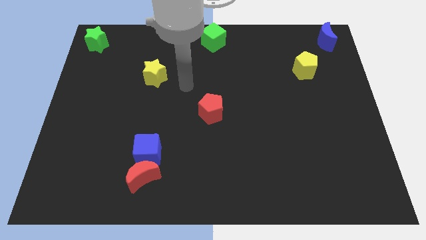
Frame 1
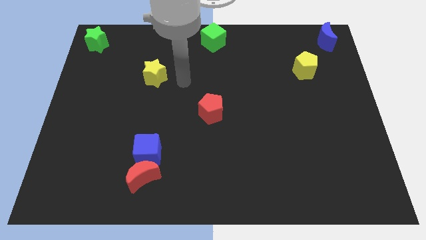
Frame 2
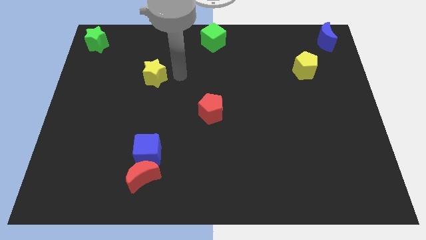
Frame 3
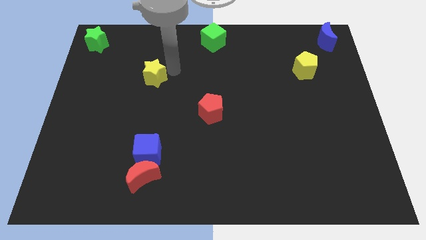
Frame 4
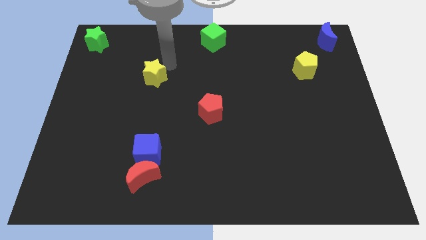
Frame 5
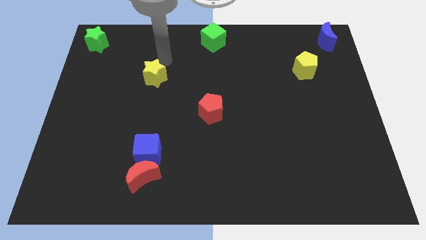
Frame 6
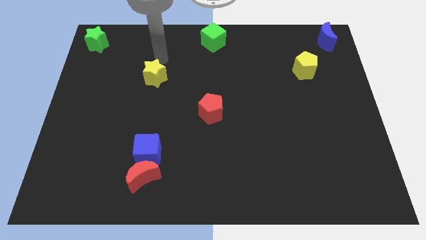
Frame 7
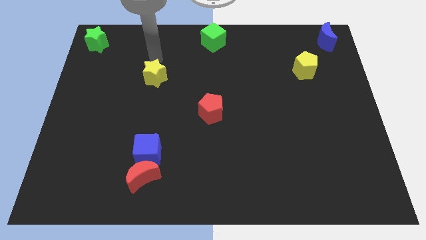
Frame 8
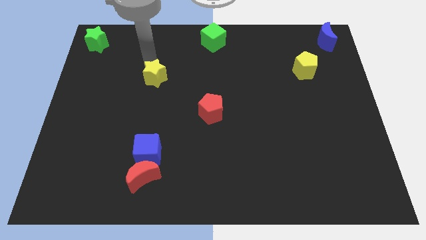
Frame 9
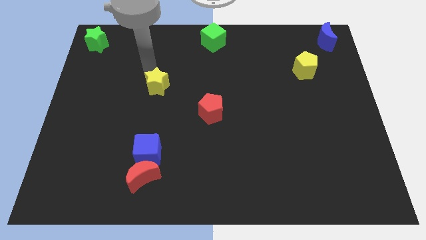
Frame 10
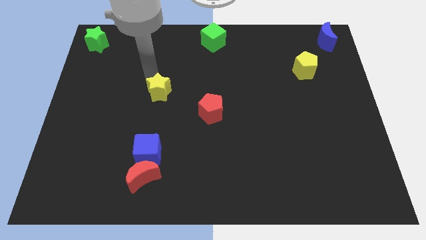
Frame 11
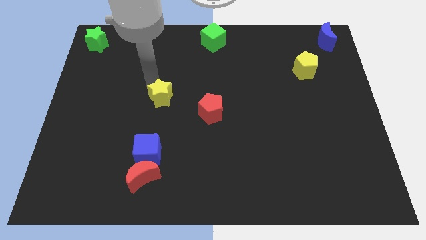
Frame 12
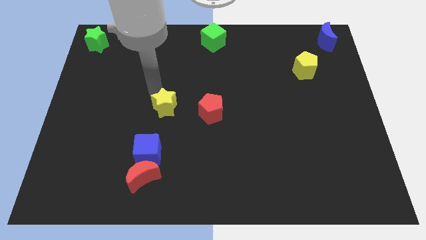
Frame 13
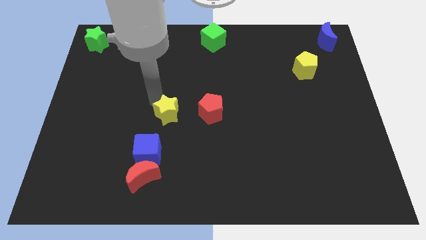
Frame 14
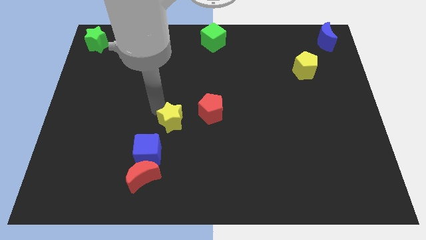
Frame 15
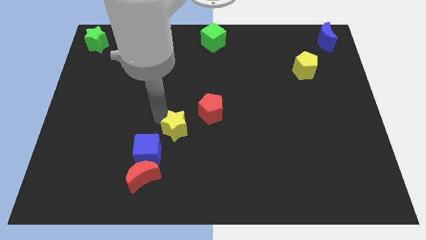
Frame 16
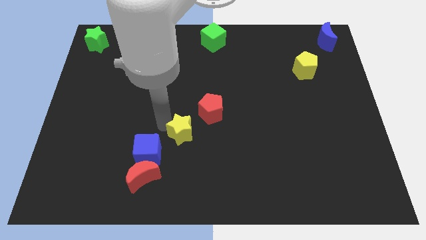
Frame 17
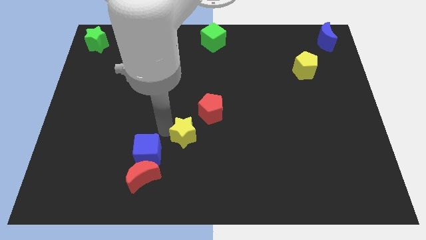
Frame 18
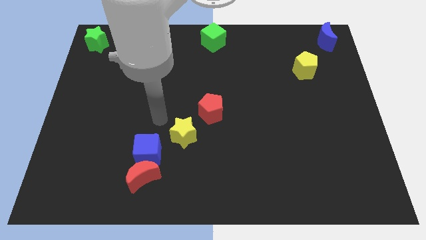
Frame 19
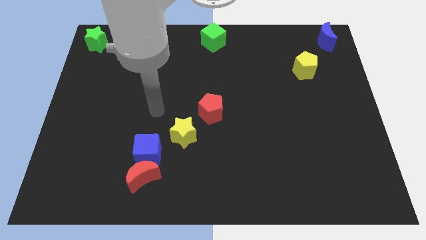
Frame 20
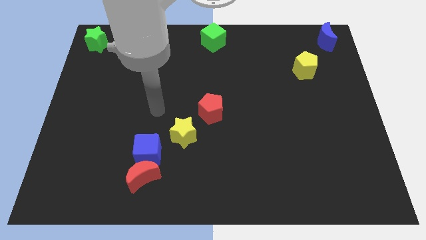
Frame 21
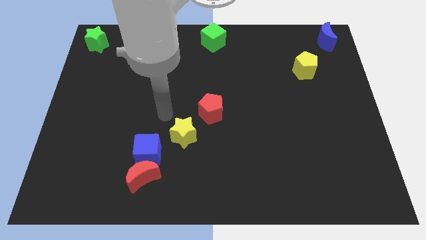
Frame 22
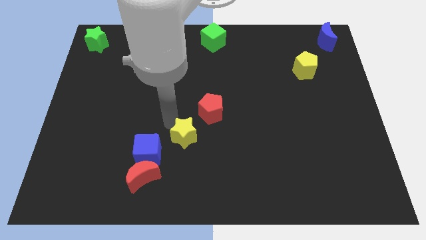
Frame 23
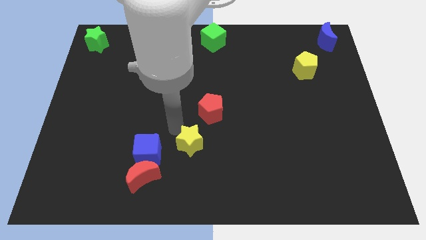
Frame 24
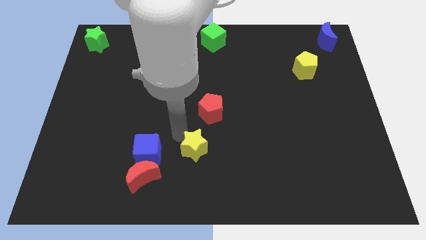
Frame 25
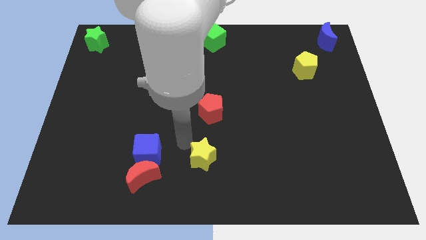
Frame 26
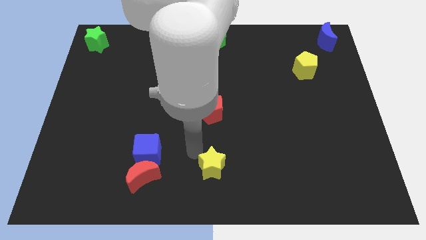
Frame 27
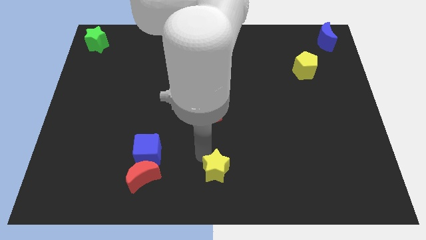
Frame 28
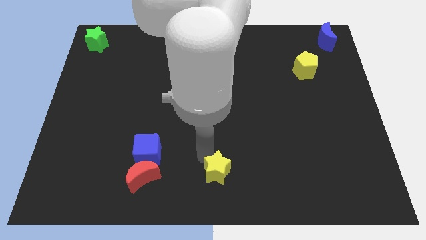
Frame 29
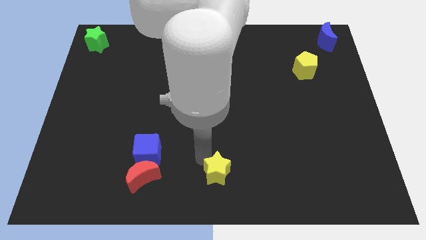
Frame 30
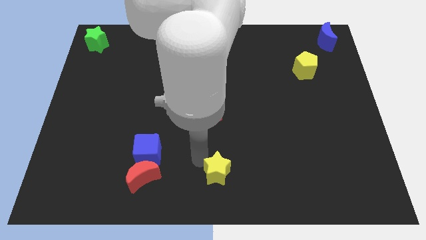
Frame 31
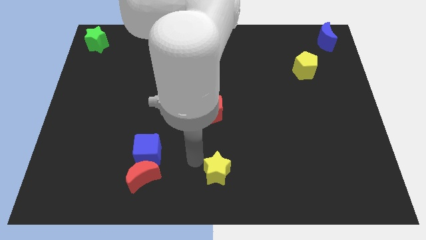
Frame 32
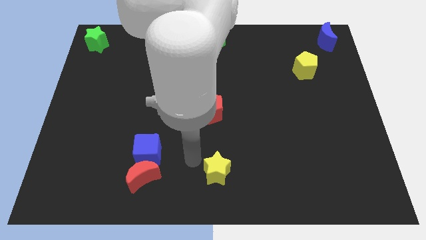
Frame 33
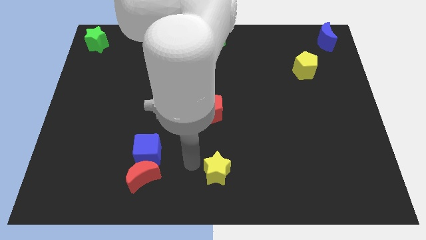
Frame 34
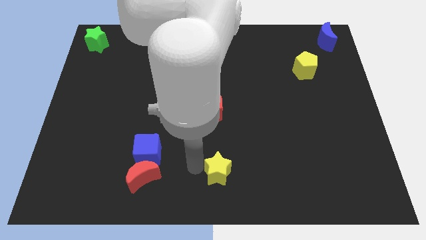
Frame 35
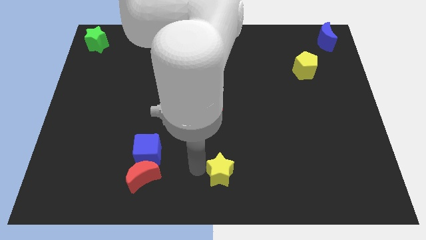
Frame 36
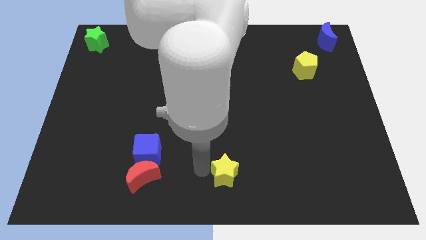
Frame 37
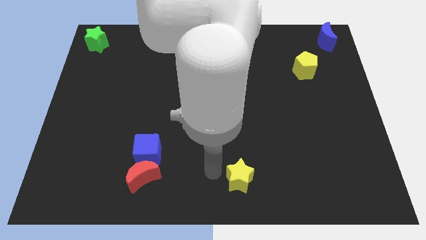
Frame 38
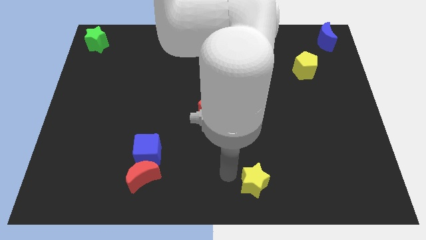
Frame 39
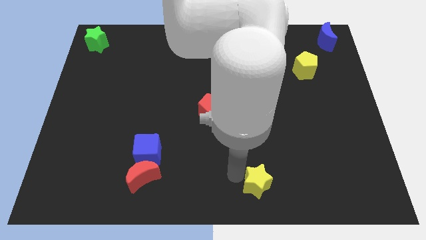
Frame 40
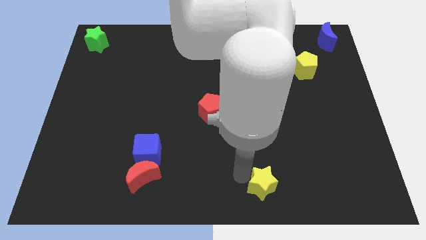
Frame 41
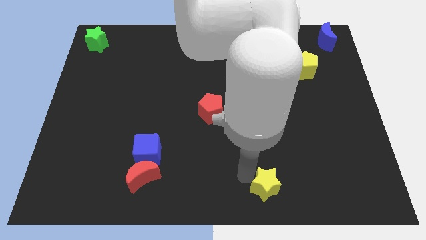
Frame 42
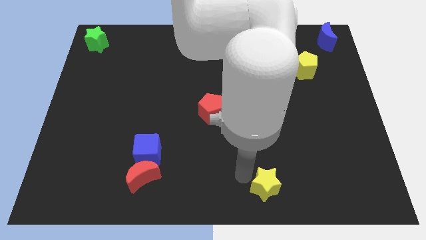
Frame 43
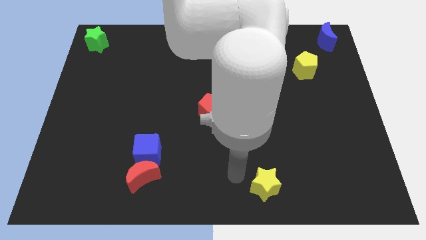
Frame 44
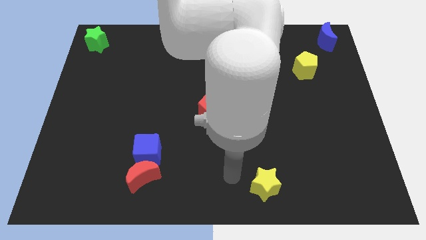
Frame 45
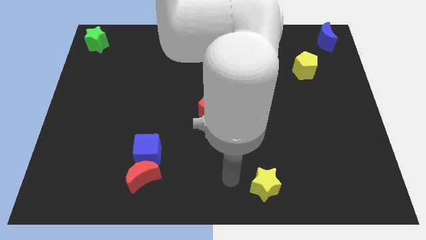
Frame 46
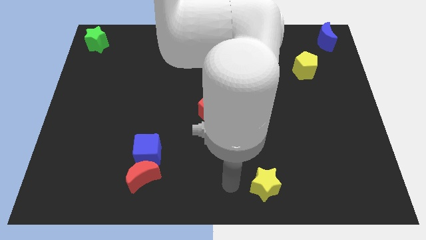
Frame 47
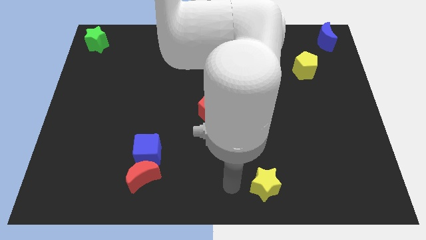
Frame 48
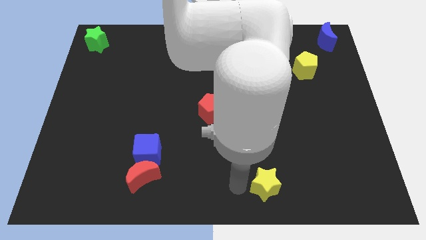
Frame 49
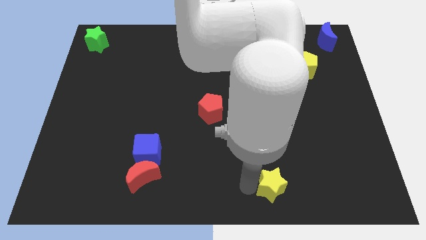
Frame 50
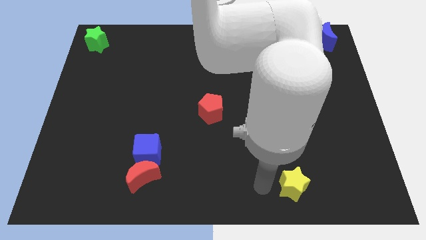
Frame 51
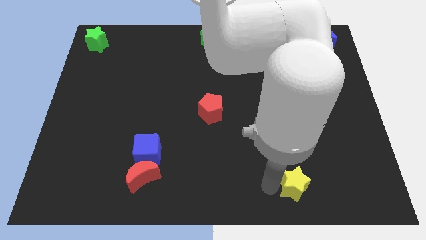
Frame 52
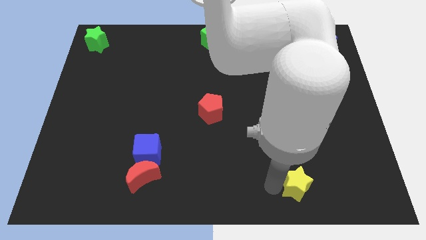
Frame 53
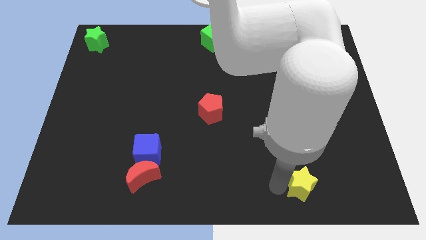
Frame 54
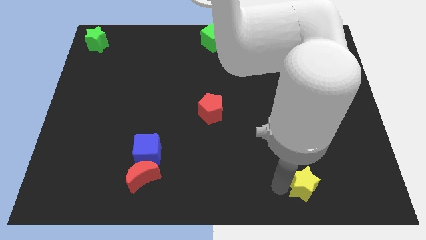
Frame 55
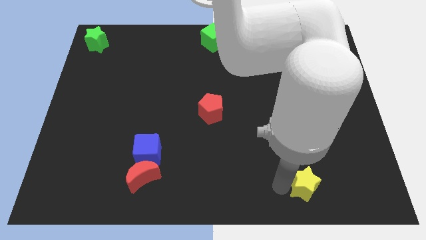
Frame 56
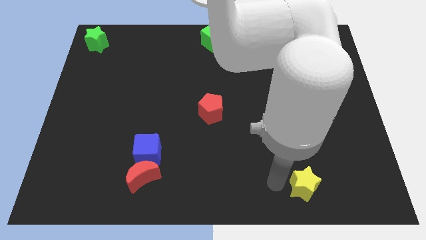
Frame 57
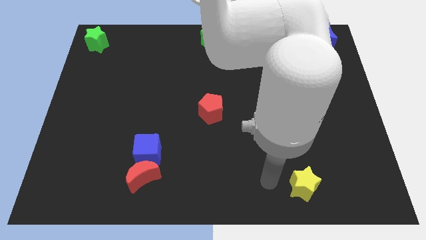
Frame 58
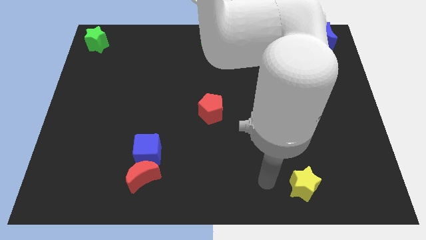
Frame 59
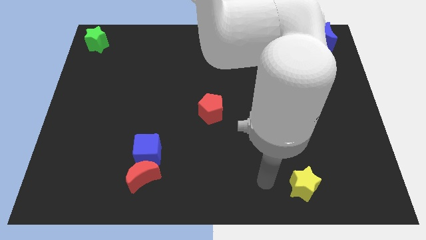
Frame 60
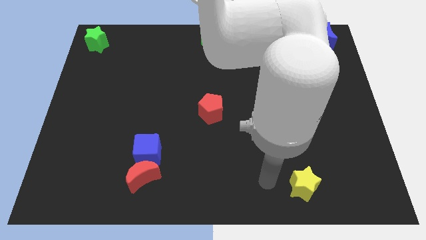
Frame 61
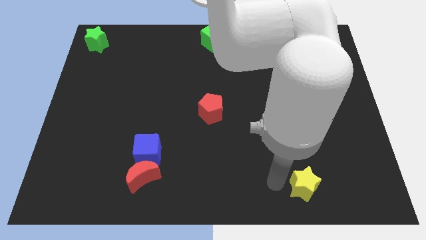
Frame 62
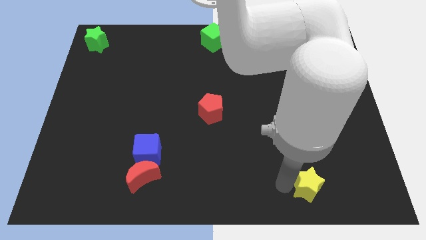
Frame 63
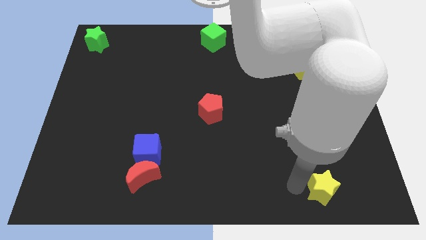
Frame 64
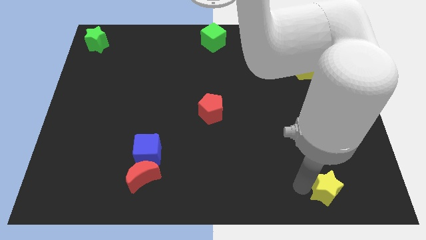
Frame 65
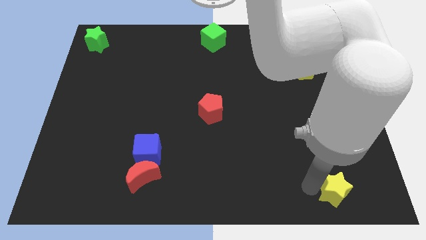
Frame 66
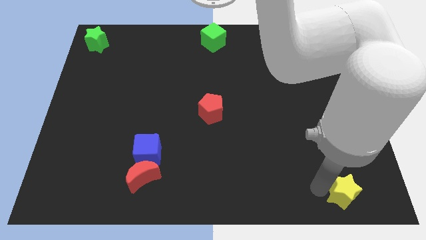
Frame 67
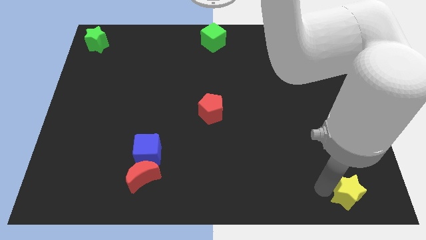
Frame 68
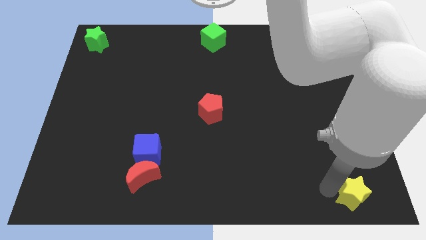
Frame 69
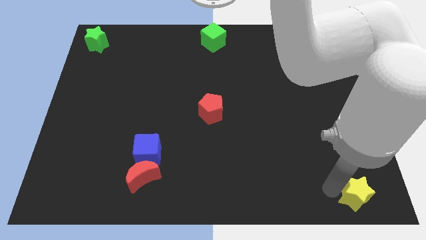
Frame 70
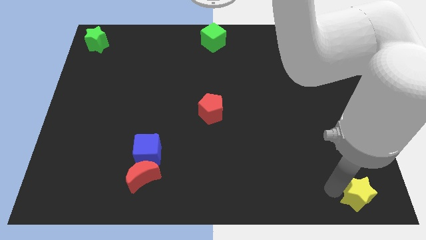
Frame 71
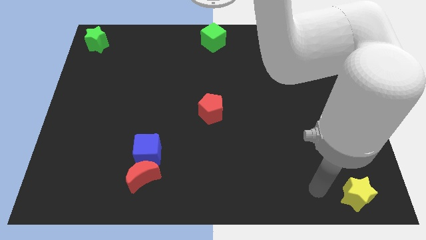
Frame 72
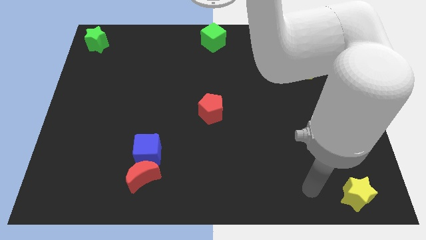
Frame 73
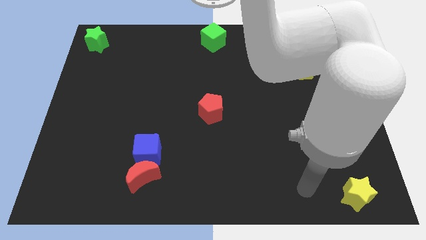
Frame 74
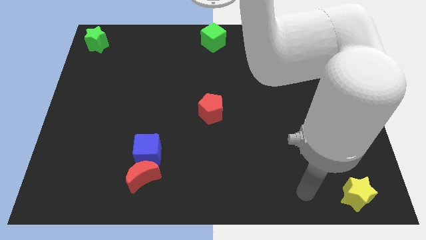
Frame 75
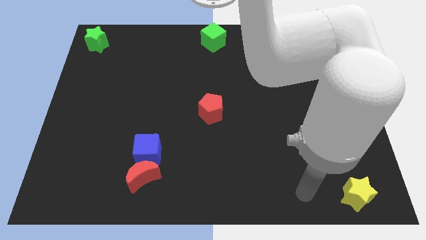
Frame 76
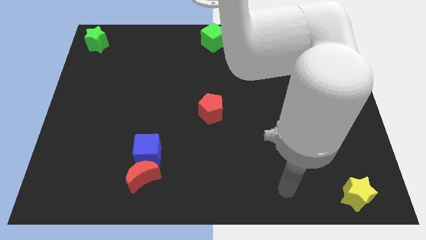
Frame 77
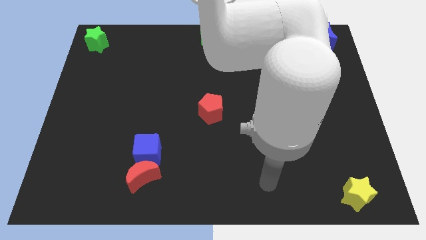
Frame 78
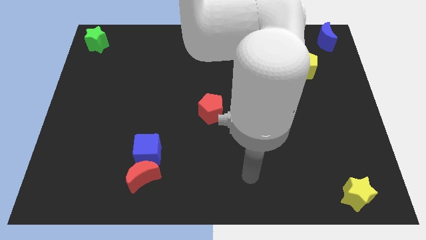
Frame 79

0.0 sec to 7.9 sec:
move the yellow star to the bottom right corner of the board

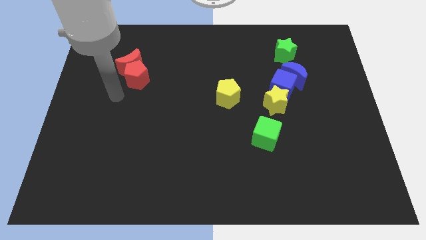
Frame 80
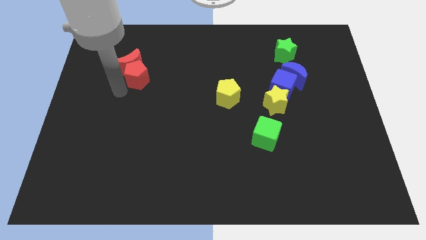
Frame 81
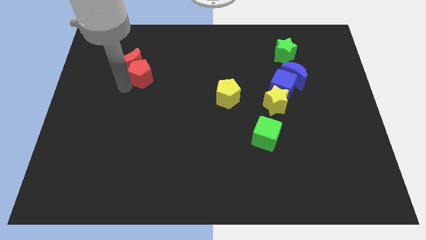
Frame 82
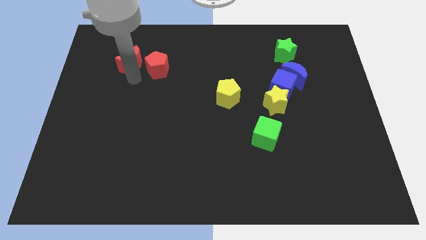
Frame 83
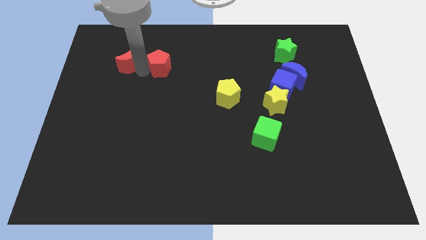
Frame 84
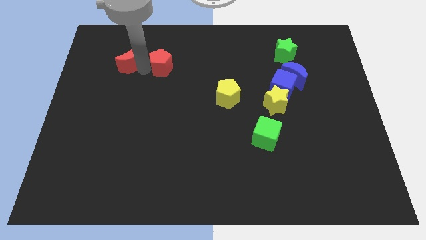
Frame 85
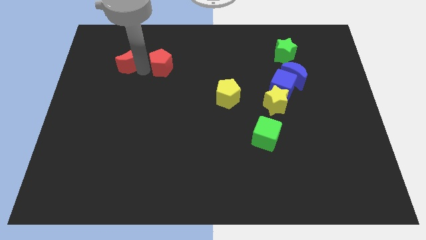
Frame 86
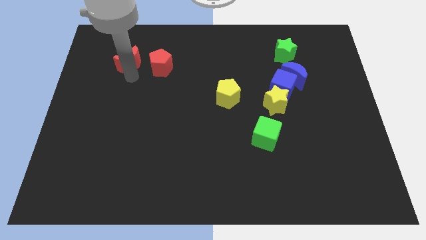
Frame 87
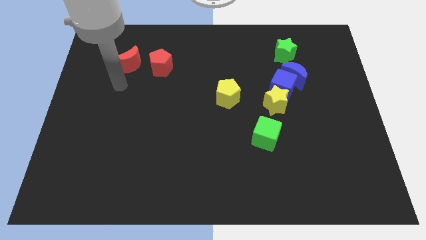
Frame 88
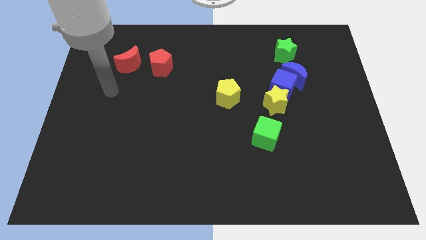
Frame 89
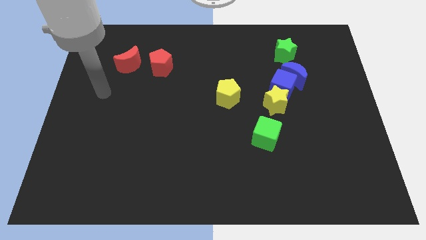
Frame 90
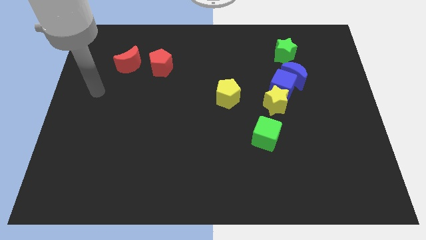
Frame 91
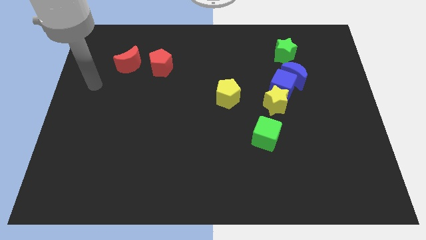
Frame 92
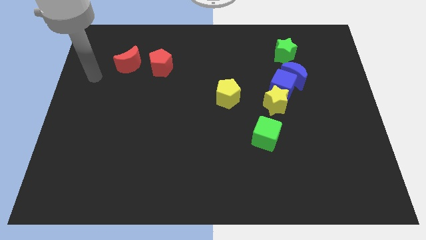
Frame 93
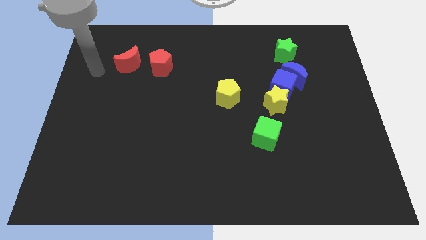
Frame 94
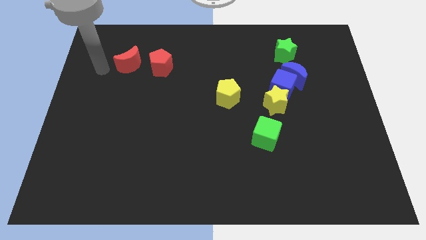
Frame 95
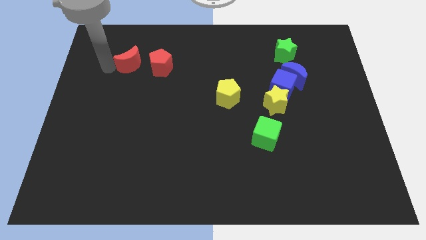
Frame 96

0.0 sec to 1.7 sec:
separate red pentagon and red moon
